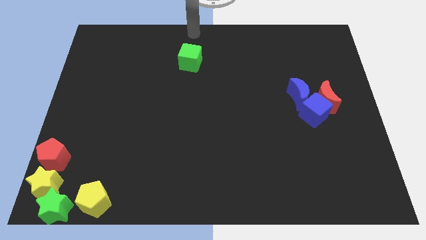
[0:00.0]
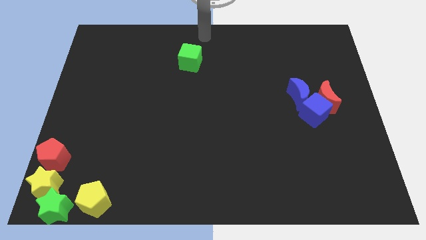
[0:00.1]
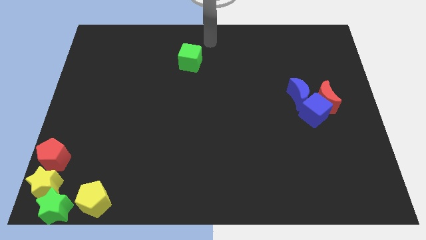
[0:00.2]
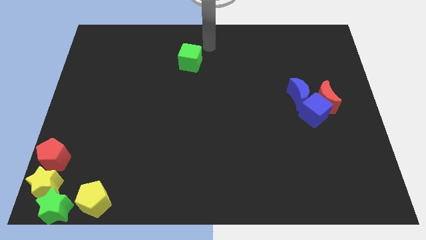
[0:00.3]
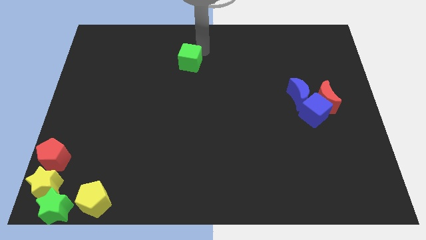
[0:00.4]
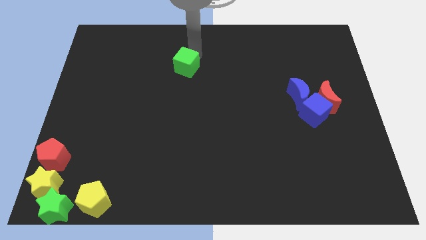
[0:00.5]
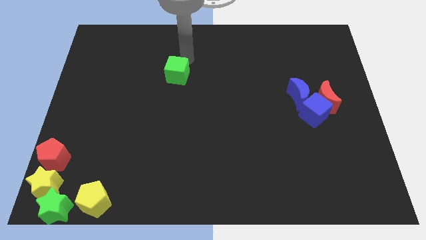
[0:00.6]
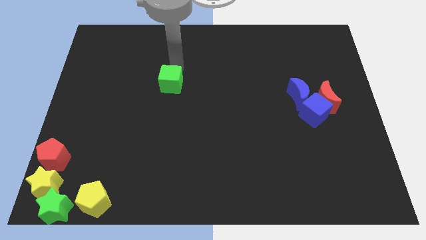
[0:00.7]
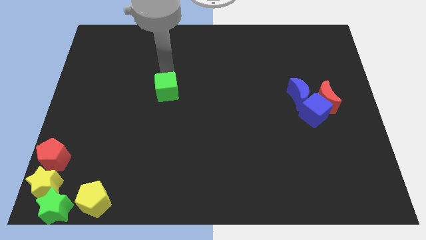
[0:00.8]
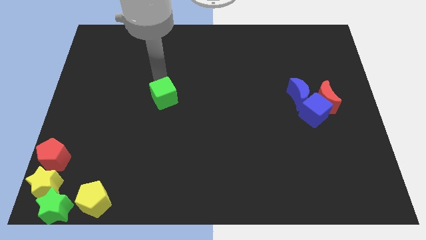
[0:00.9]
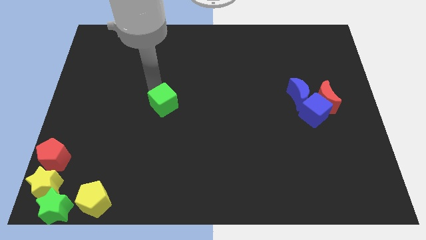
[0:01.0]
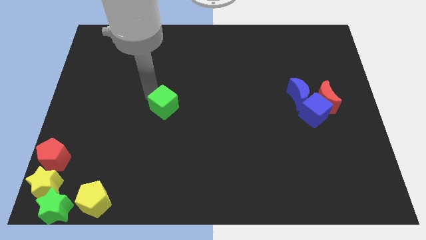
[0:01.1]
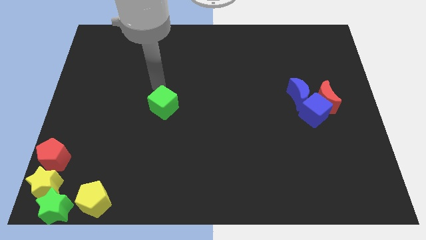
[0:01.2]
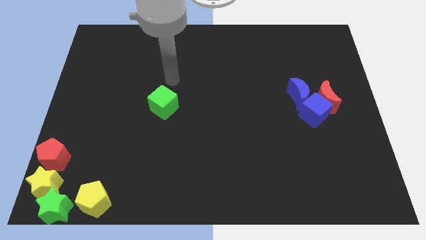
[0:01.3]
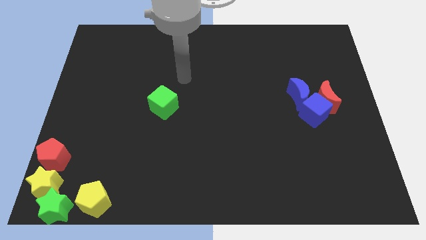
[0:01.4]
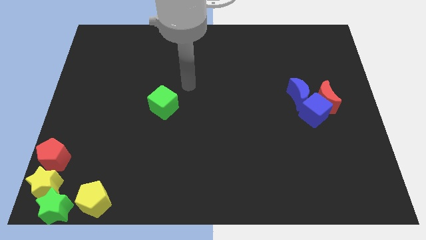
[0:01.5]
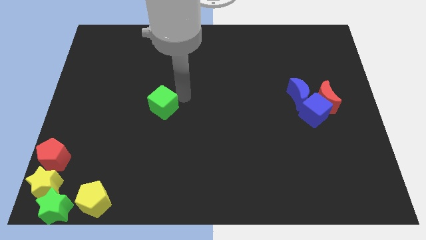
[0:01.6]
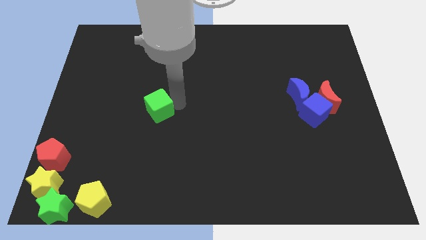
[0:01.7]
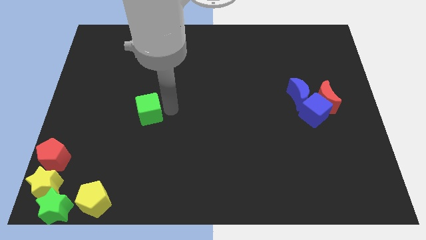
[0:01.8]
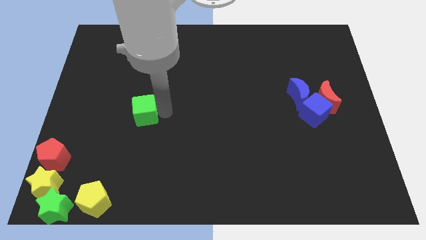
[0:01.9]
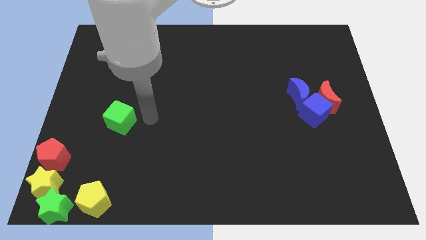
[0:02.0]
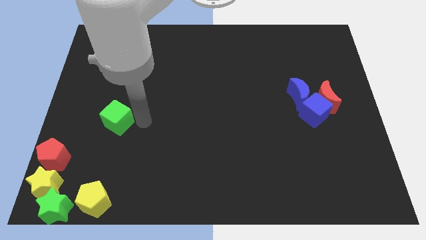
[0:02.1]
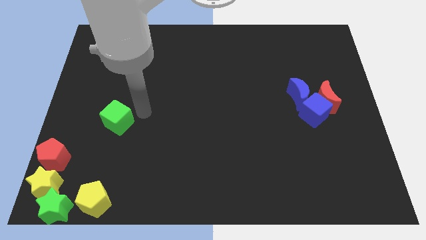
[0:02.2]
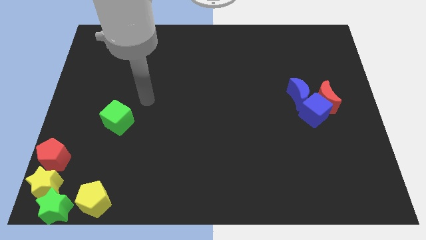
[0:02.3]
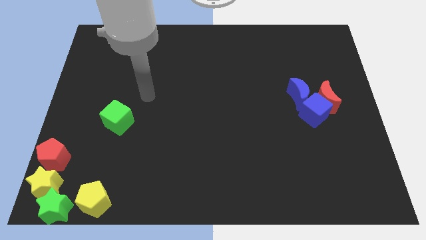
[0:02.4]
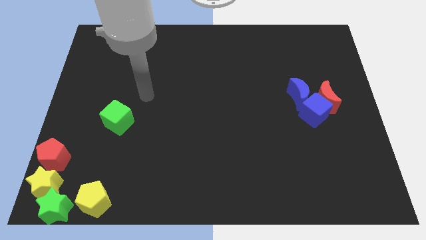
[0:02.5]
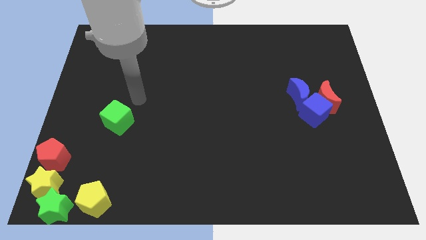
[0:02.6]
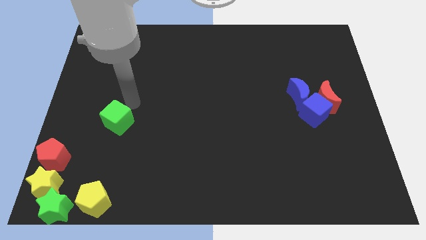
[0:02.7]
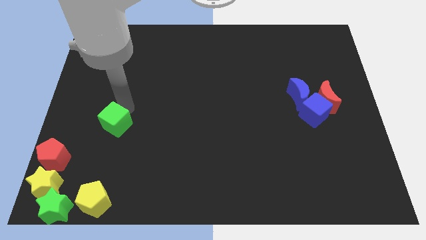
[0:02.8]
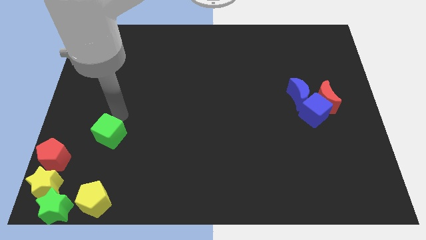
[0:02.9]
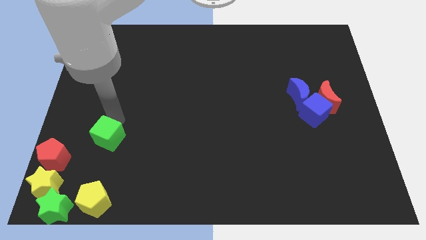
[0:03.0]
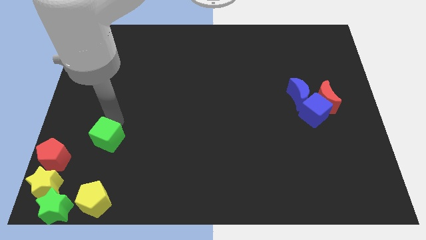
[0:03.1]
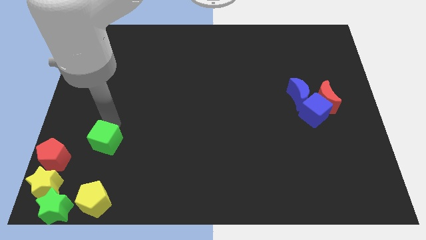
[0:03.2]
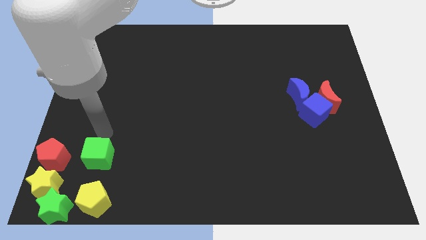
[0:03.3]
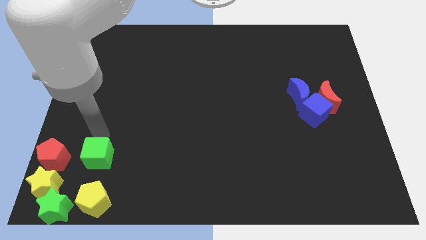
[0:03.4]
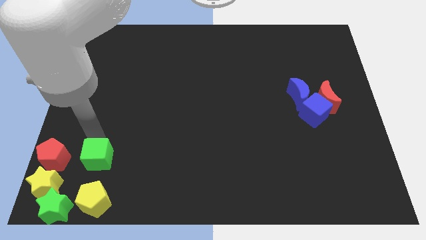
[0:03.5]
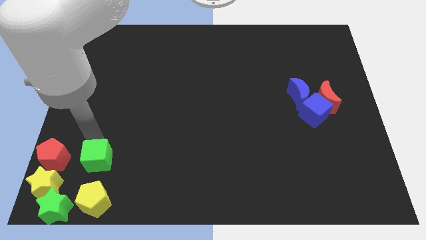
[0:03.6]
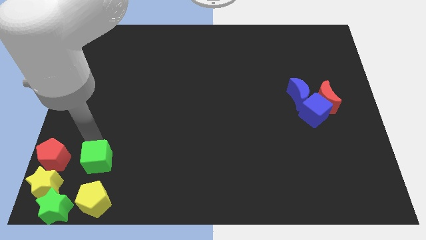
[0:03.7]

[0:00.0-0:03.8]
place the green cube to the right side of the red pentagon

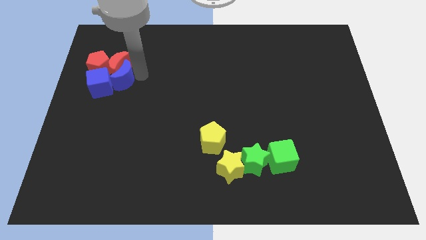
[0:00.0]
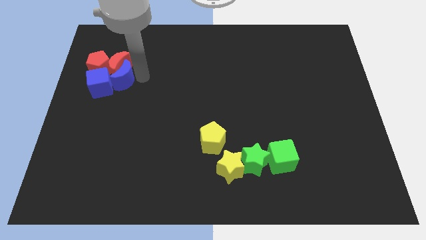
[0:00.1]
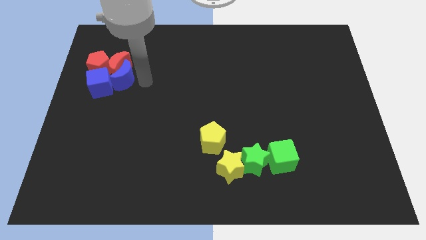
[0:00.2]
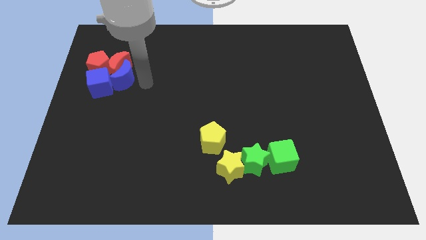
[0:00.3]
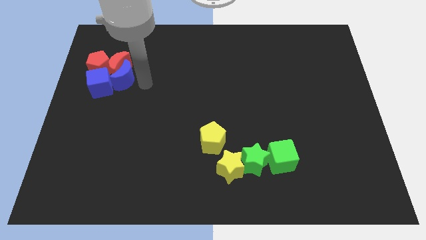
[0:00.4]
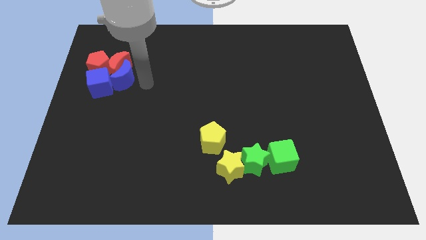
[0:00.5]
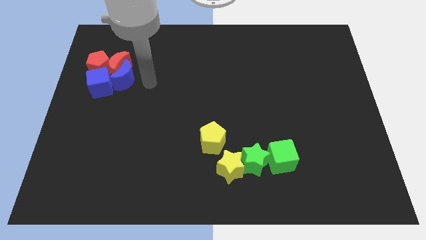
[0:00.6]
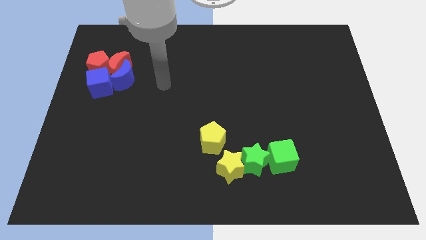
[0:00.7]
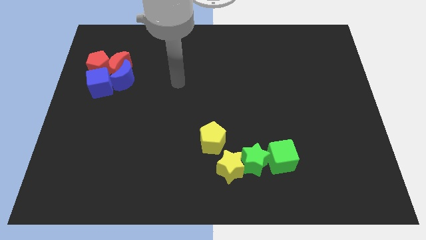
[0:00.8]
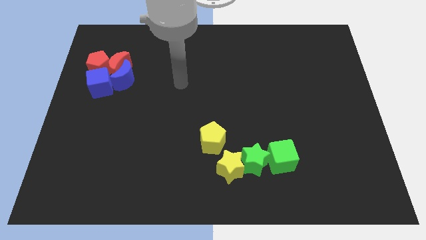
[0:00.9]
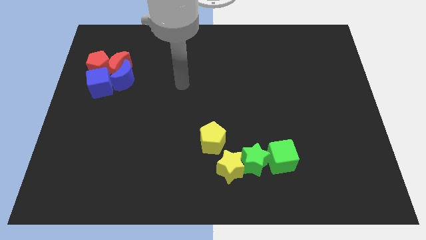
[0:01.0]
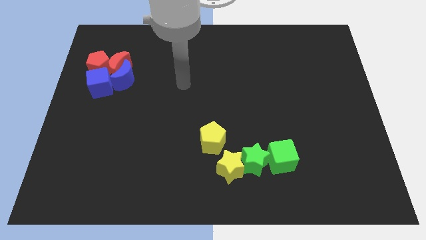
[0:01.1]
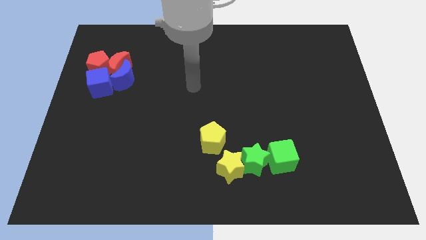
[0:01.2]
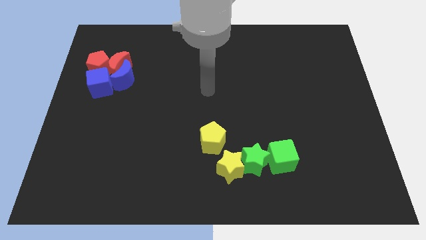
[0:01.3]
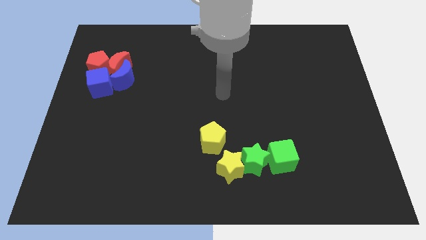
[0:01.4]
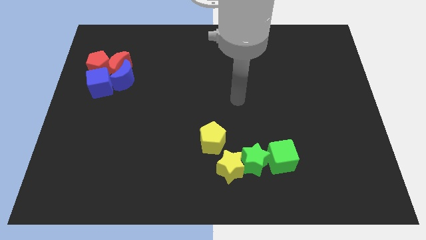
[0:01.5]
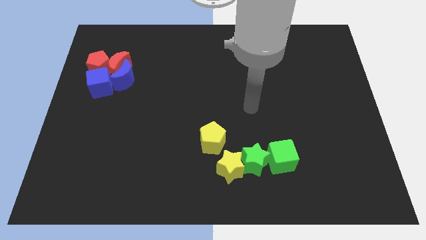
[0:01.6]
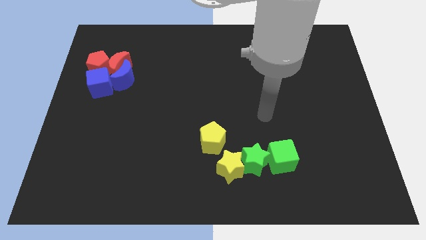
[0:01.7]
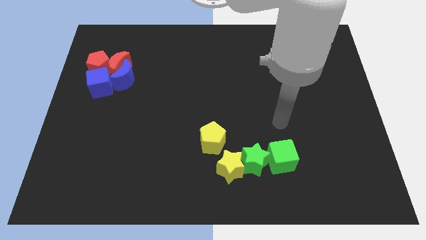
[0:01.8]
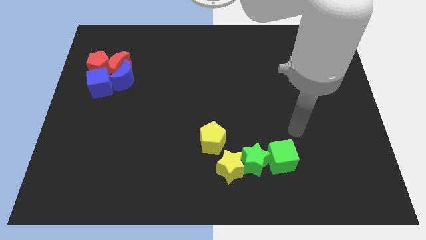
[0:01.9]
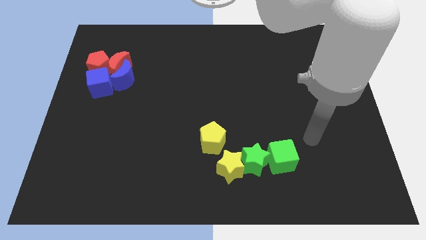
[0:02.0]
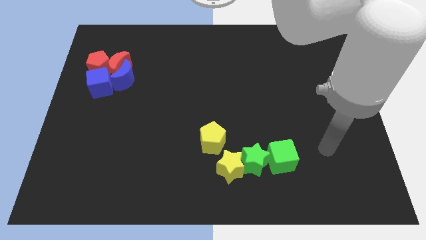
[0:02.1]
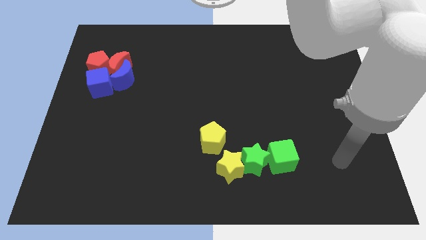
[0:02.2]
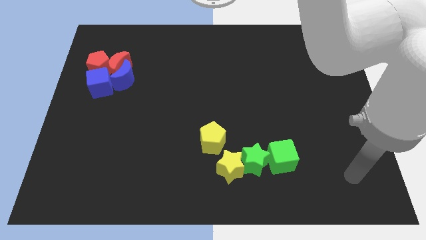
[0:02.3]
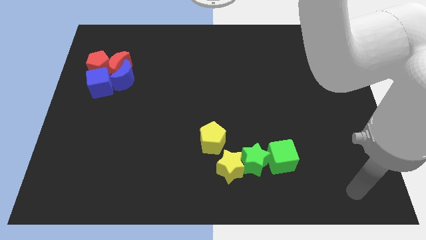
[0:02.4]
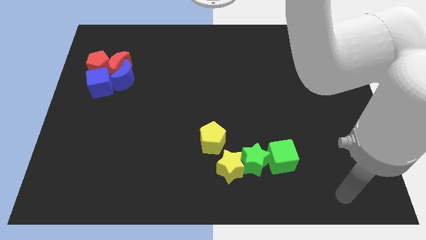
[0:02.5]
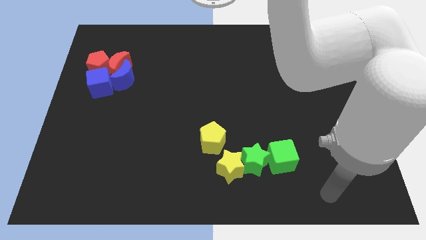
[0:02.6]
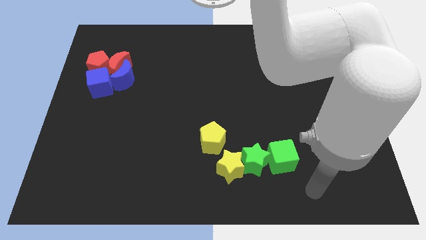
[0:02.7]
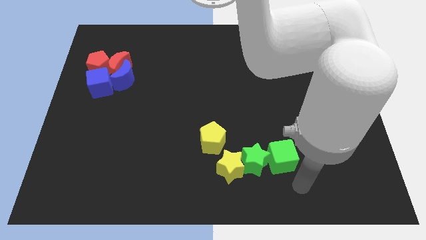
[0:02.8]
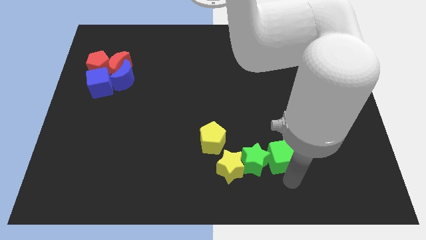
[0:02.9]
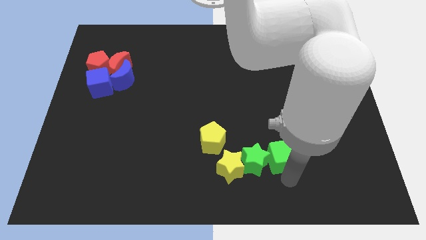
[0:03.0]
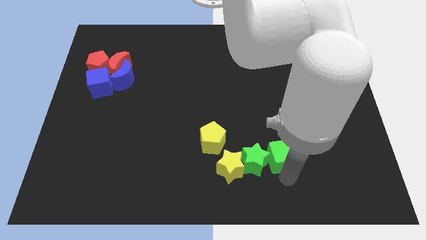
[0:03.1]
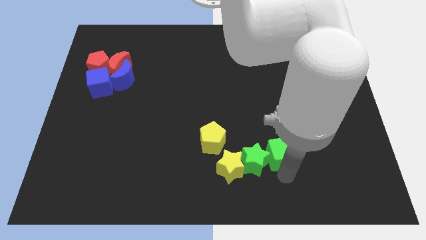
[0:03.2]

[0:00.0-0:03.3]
tap at the bottom side of the green cube

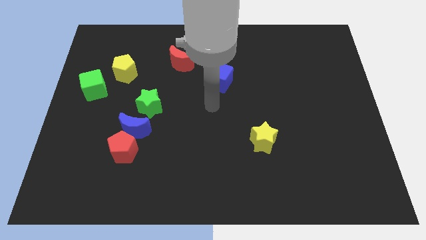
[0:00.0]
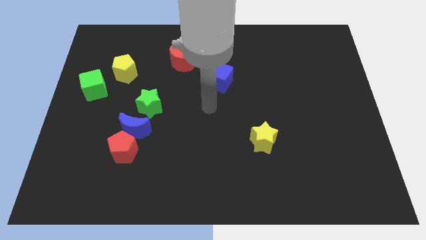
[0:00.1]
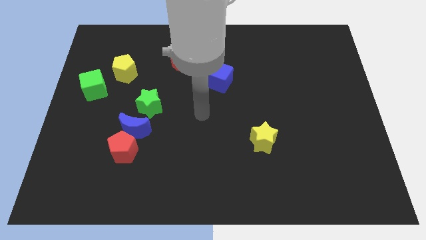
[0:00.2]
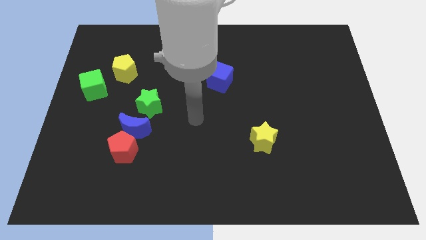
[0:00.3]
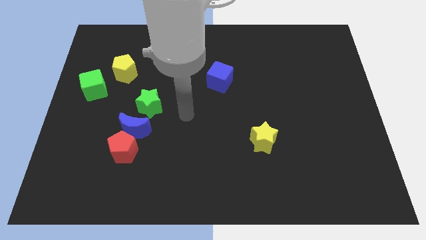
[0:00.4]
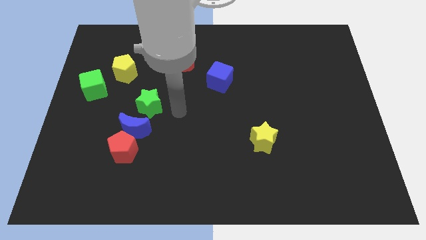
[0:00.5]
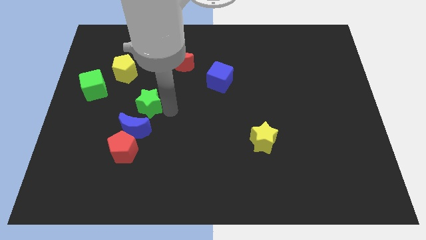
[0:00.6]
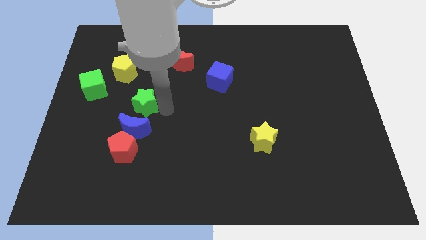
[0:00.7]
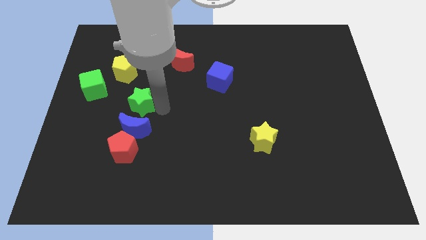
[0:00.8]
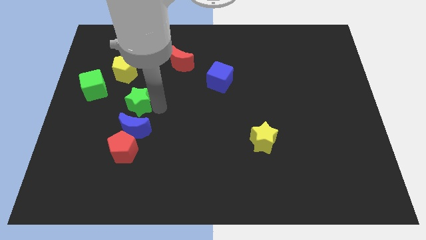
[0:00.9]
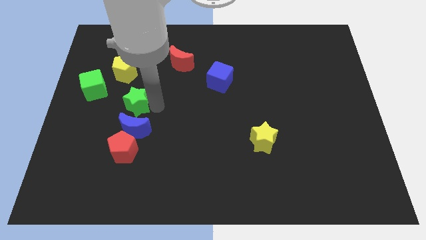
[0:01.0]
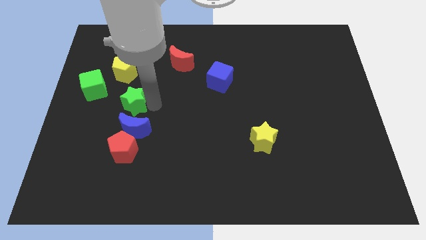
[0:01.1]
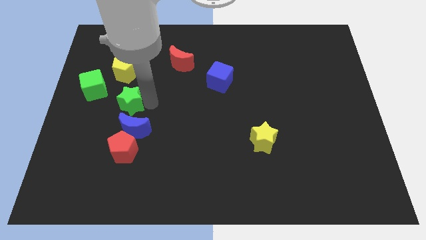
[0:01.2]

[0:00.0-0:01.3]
push the green star closer to the green cube

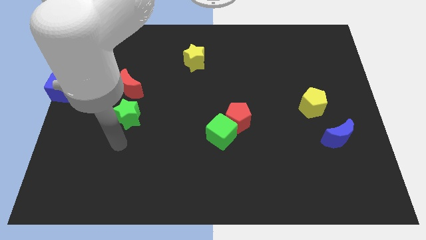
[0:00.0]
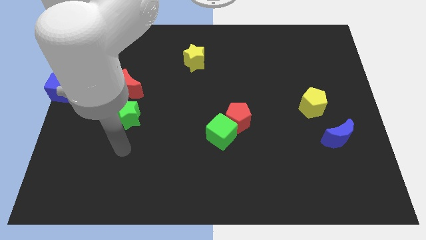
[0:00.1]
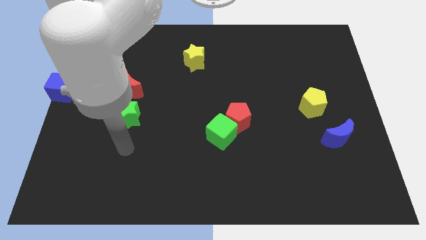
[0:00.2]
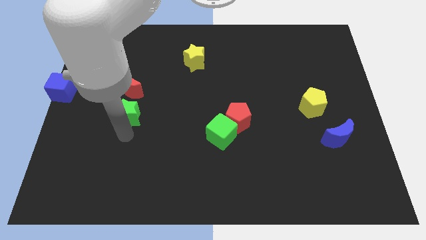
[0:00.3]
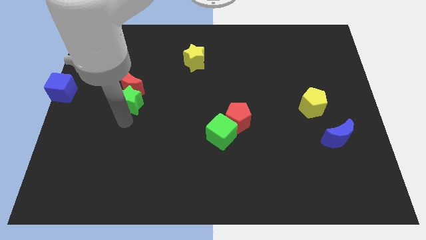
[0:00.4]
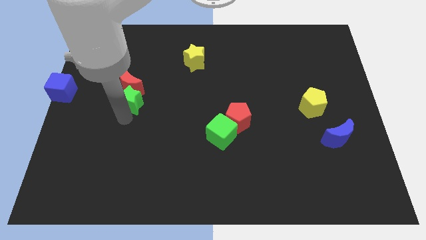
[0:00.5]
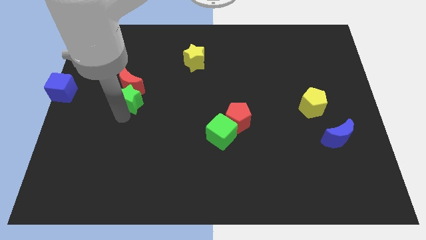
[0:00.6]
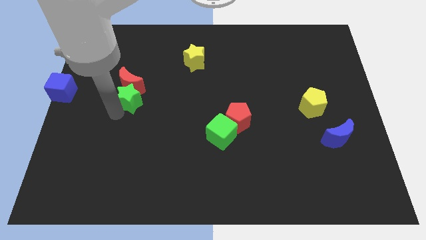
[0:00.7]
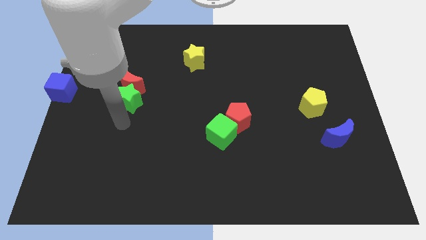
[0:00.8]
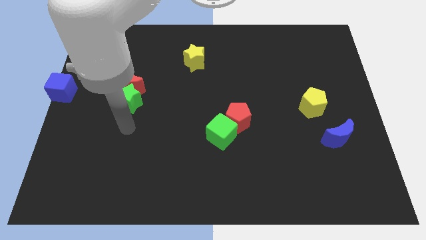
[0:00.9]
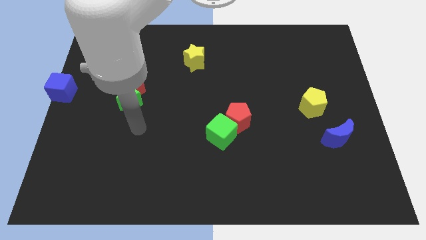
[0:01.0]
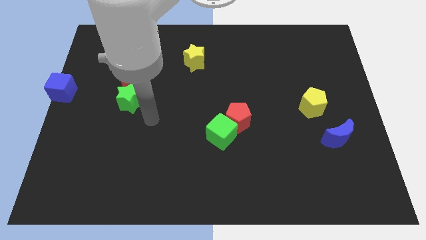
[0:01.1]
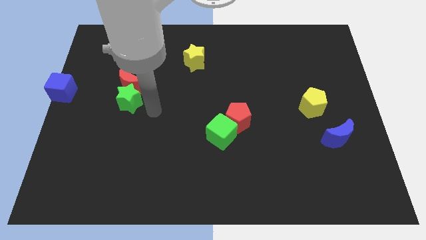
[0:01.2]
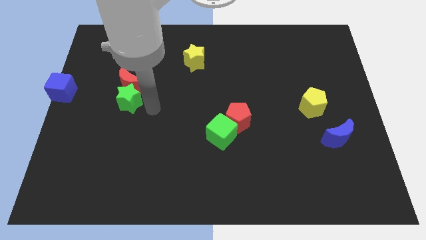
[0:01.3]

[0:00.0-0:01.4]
push the green star into the red crescent
